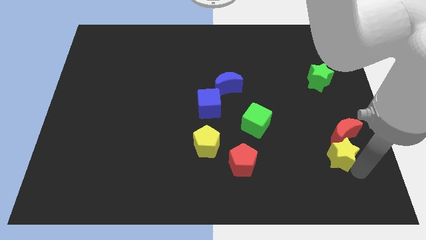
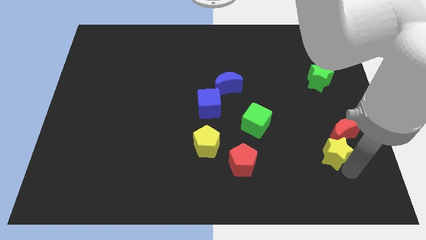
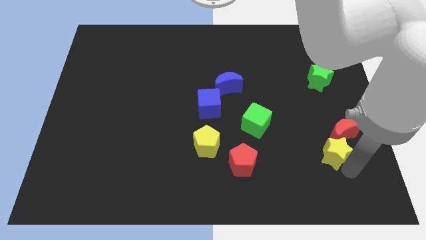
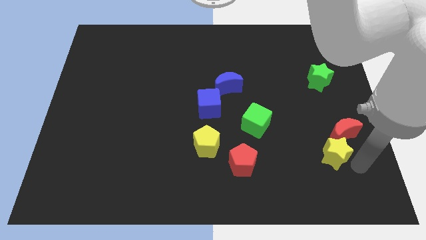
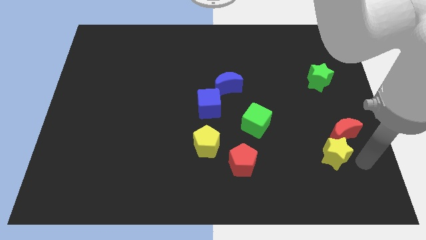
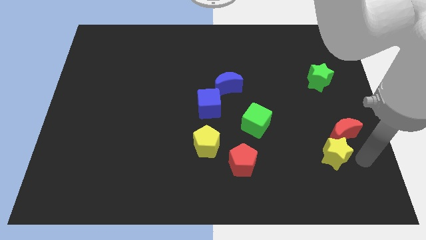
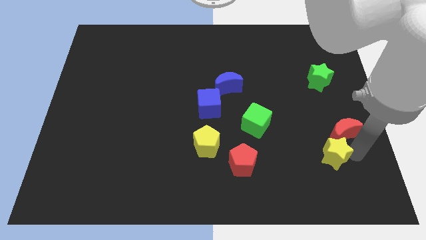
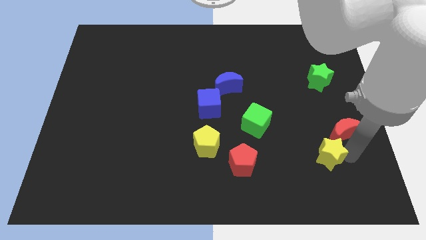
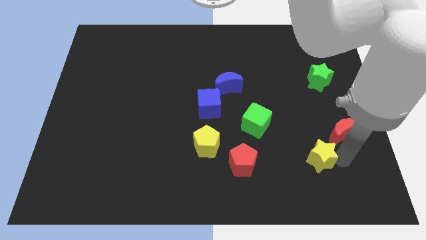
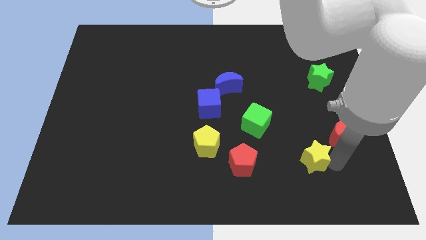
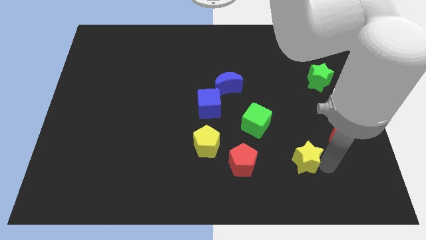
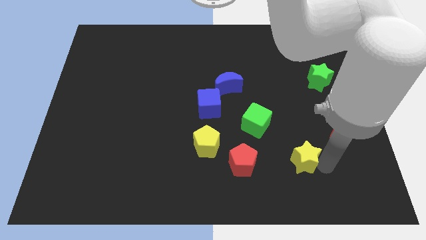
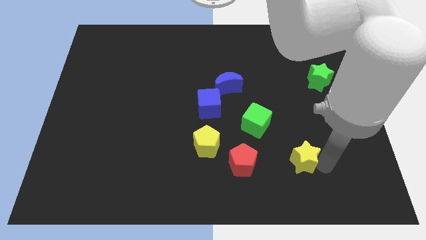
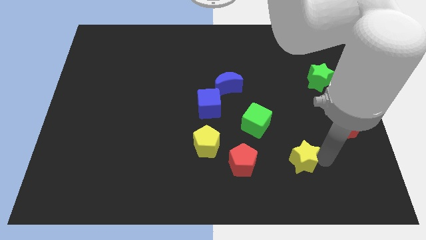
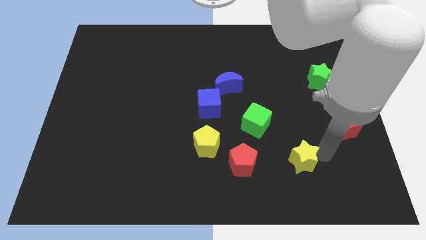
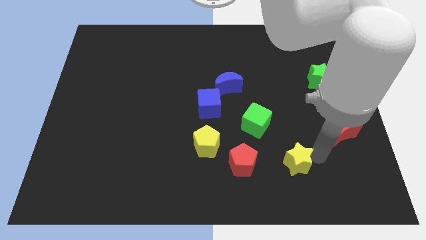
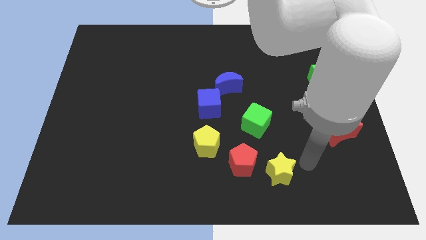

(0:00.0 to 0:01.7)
separate the yellow star from the red crescent

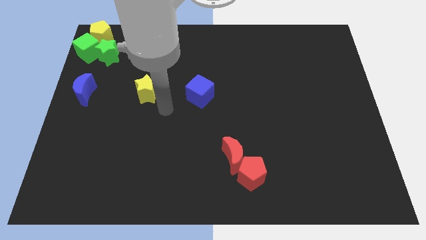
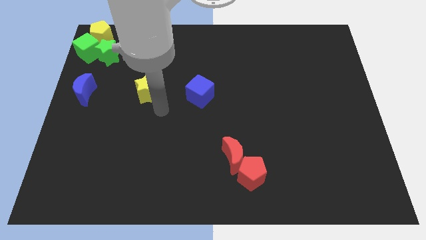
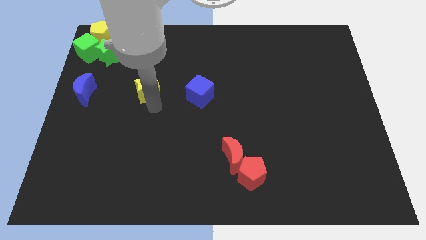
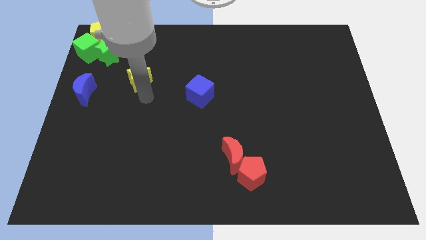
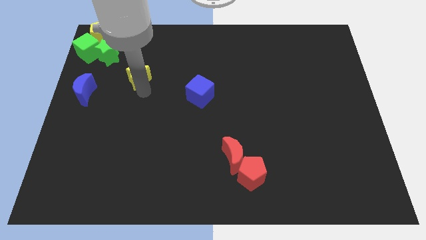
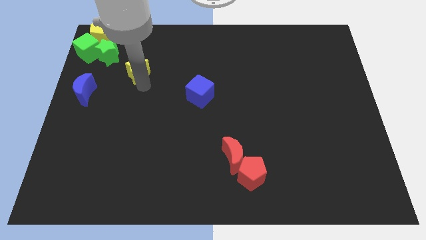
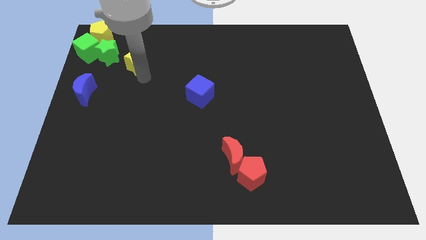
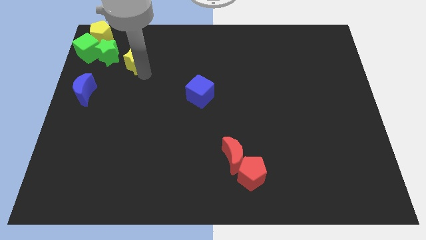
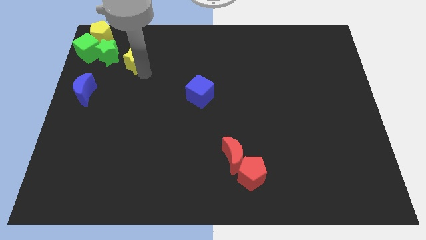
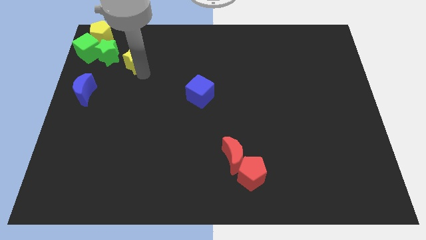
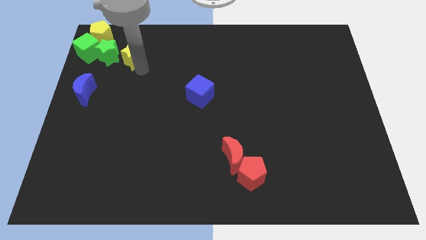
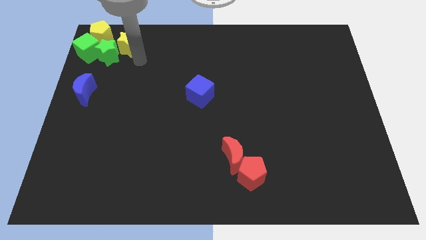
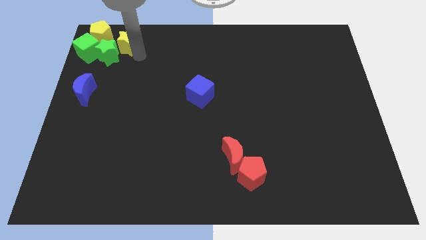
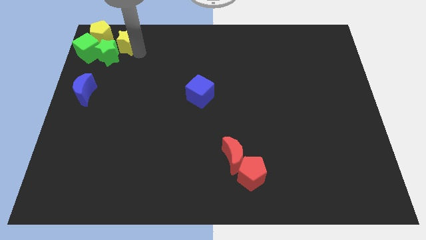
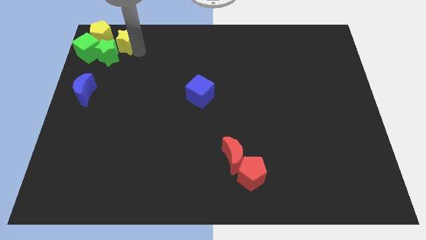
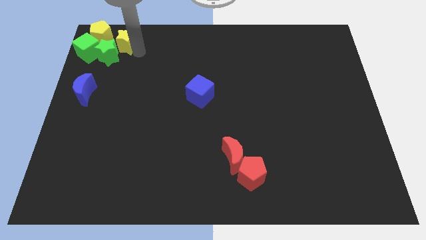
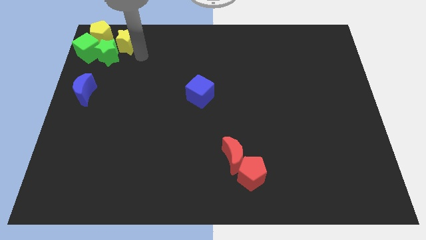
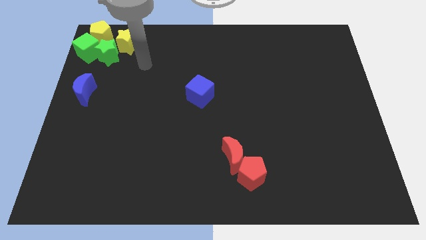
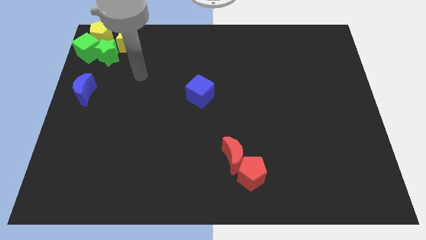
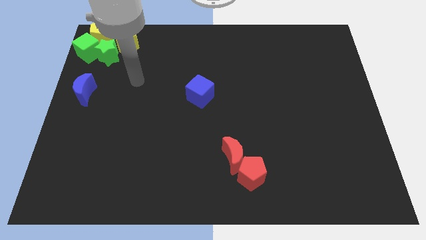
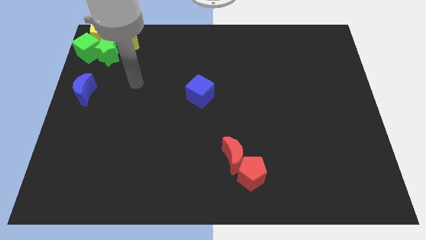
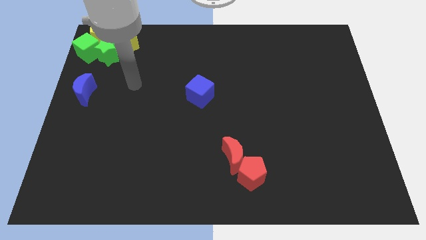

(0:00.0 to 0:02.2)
slide the yellow star close to the yellow pentagon

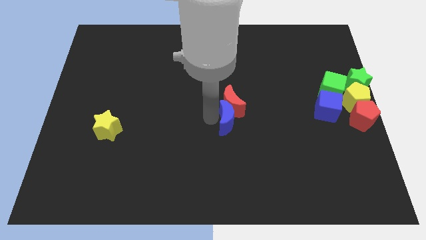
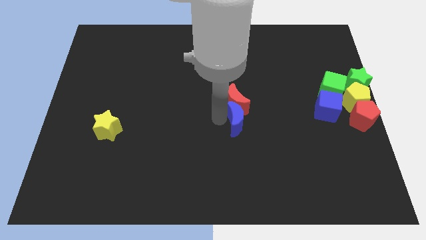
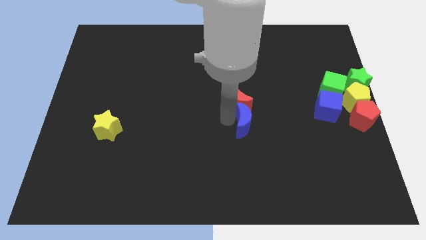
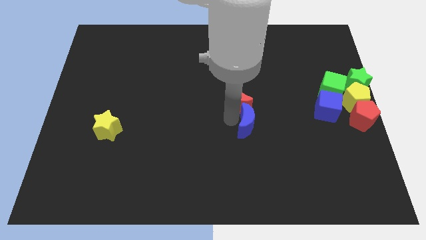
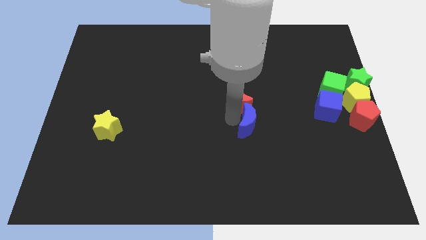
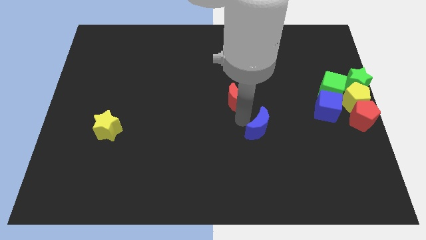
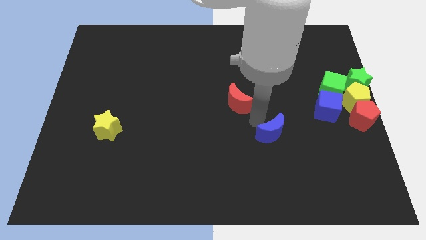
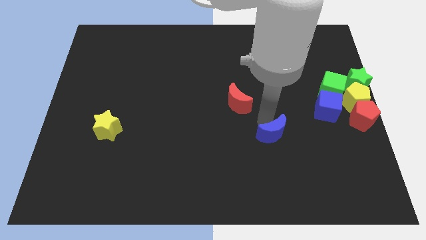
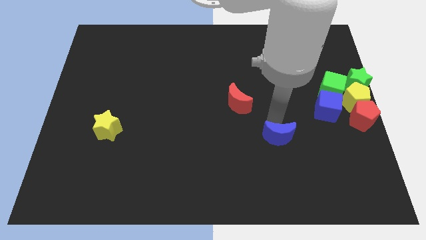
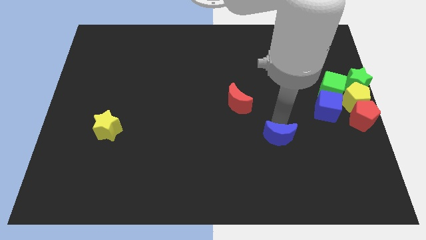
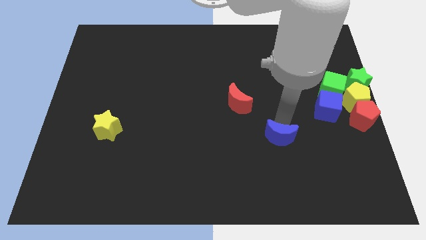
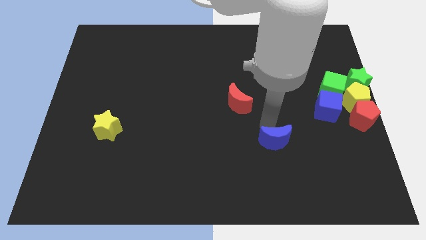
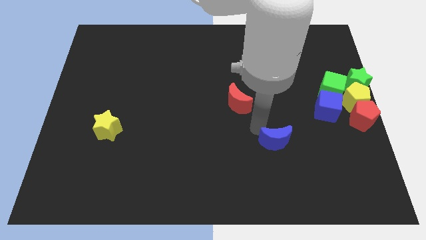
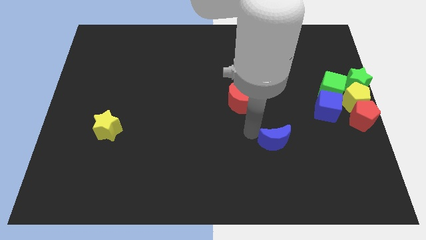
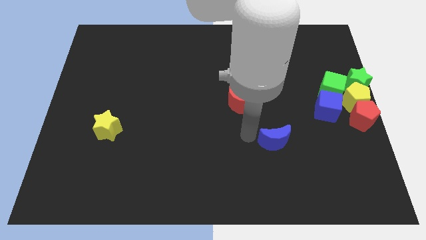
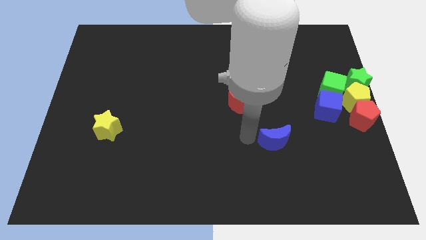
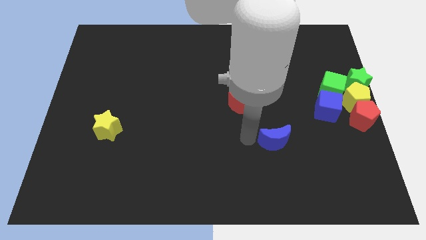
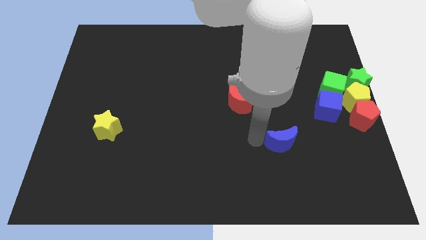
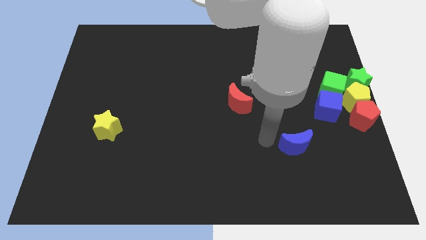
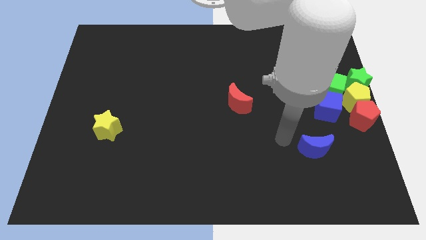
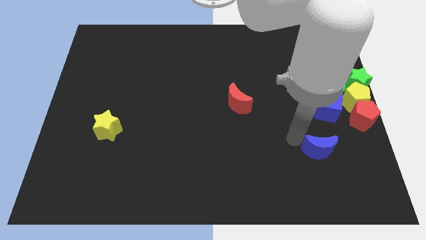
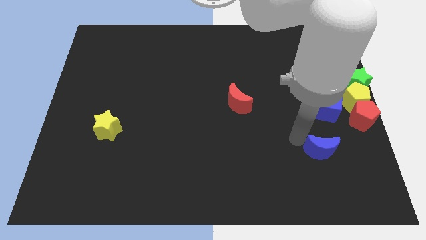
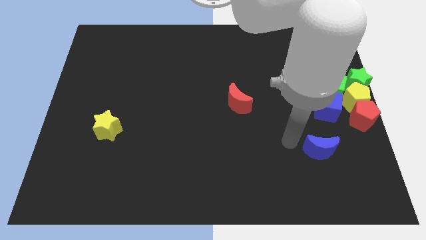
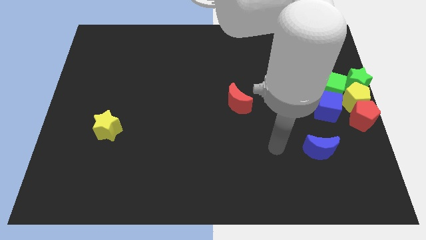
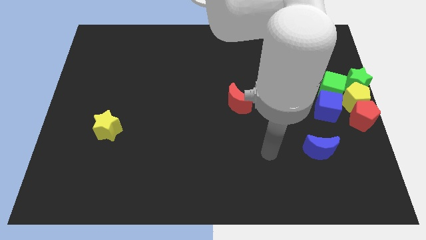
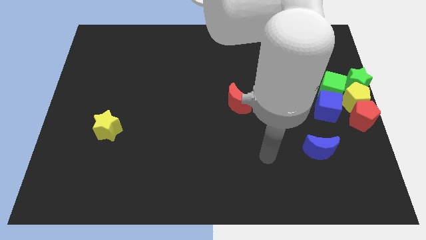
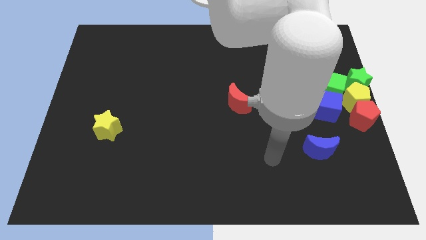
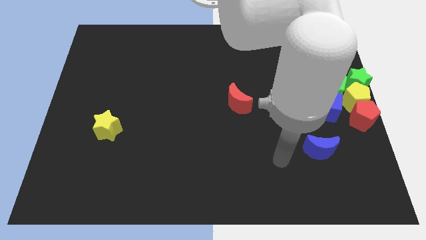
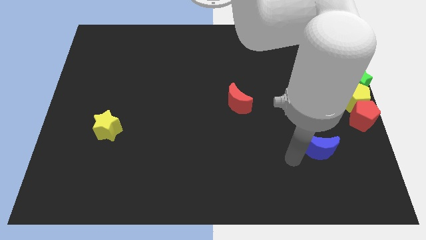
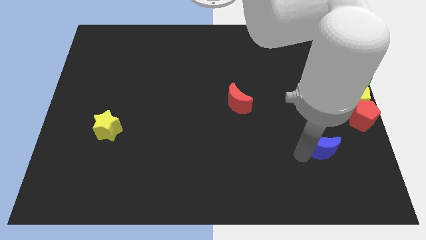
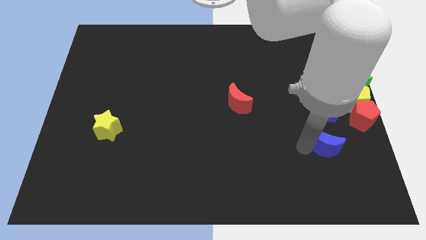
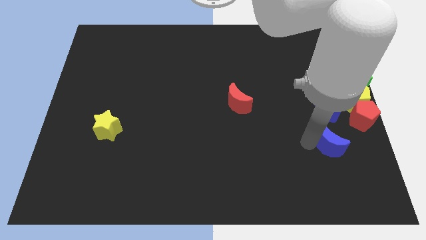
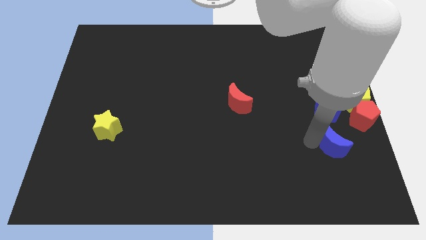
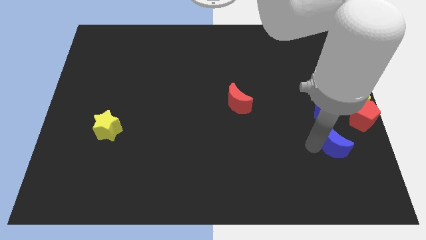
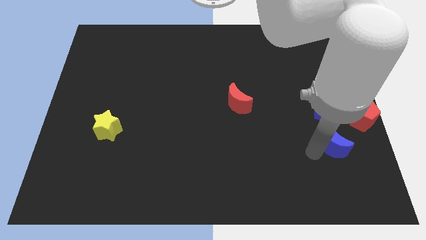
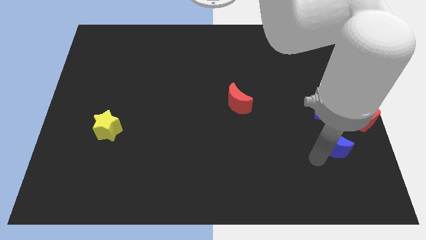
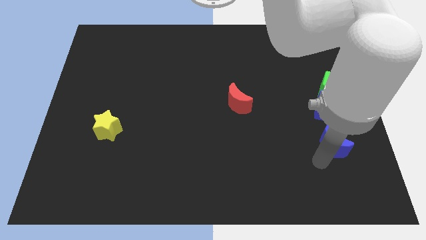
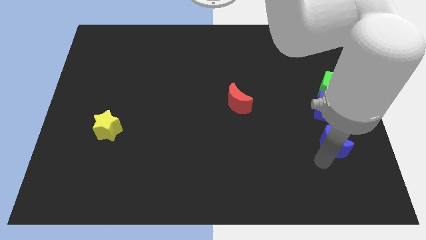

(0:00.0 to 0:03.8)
move the blue crescent below the blue cube

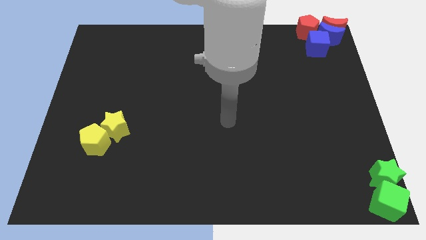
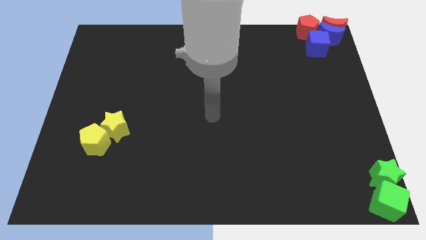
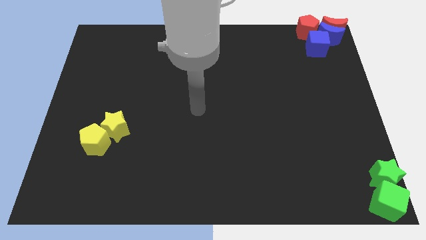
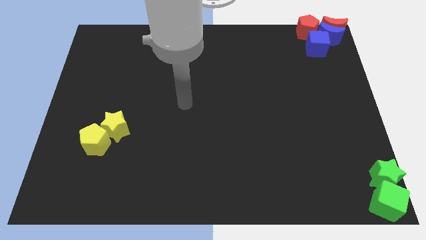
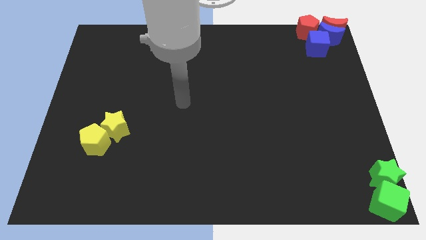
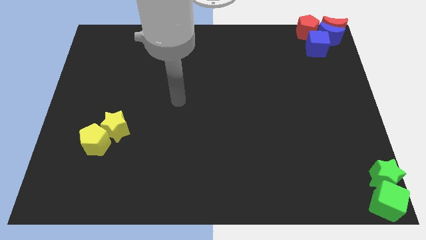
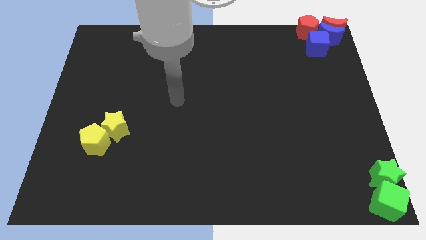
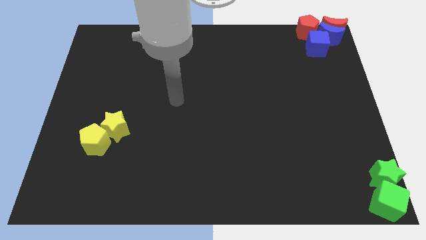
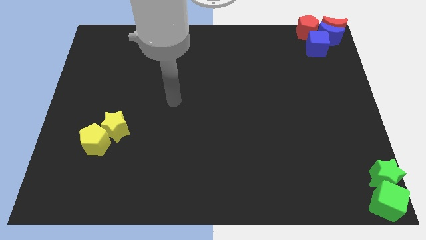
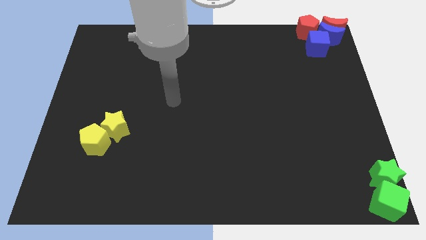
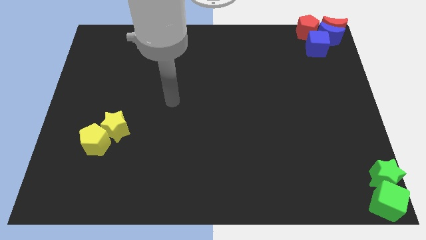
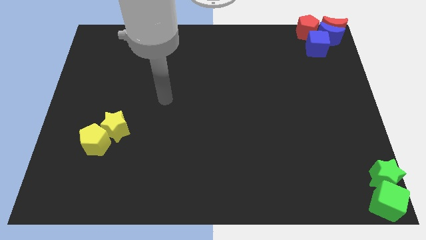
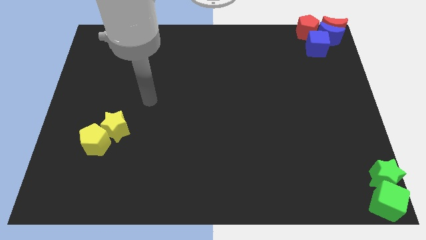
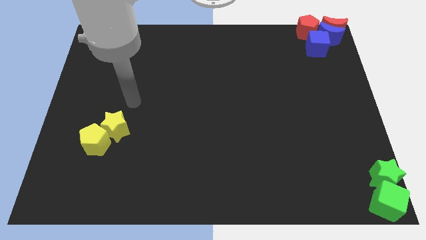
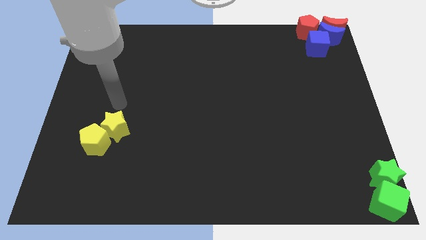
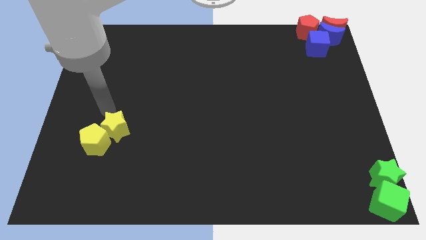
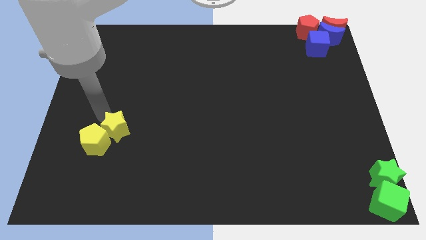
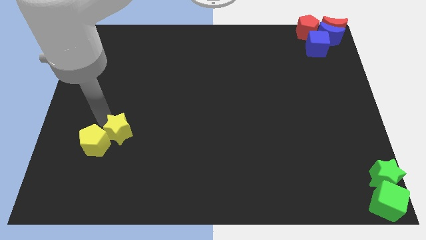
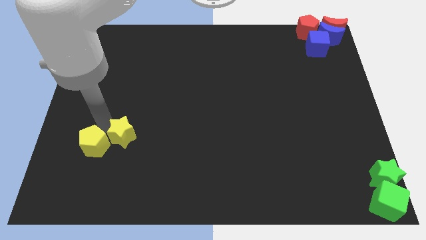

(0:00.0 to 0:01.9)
move your arm into the yellow star
